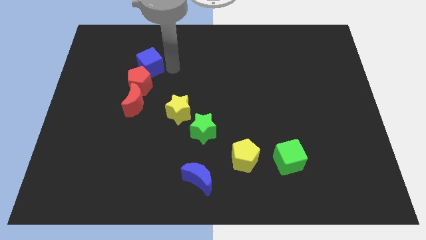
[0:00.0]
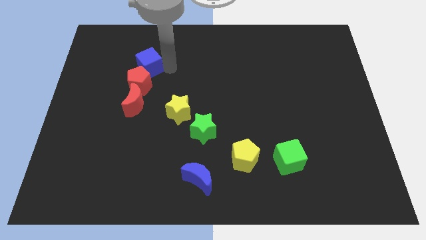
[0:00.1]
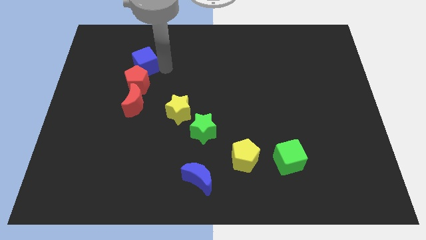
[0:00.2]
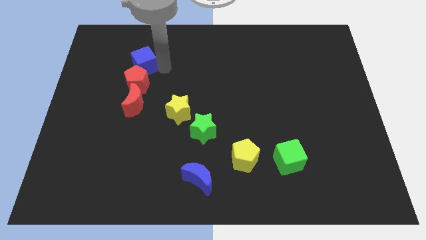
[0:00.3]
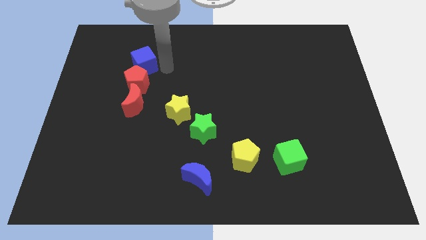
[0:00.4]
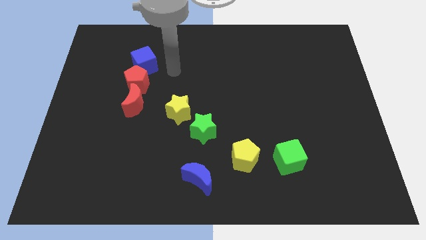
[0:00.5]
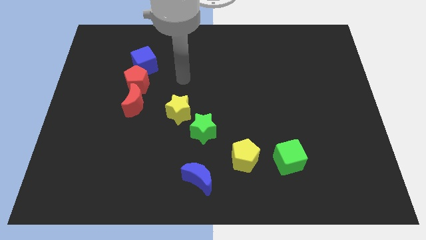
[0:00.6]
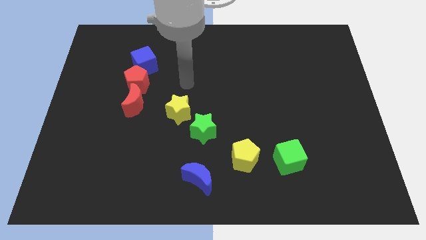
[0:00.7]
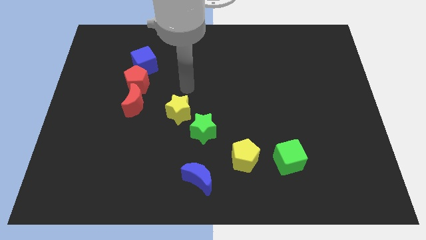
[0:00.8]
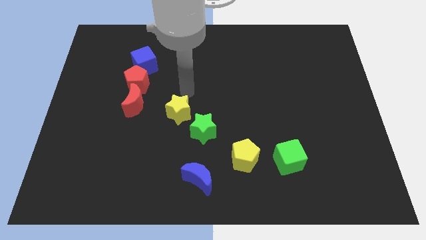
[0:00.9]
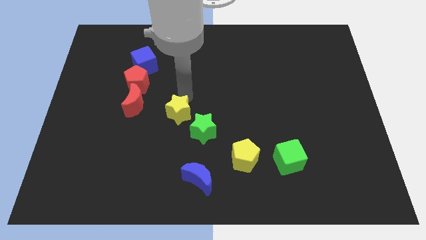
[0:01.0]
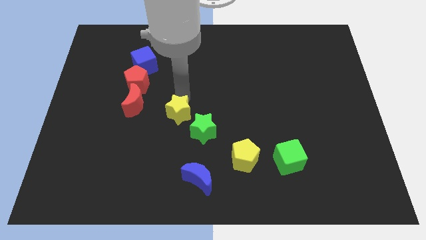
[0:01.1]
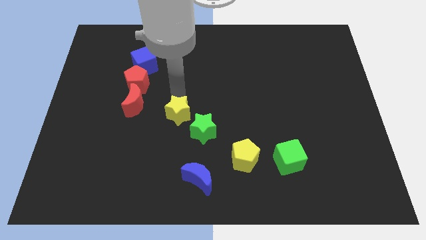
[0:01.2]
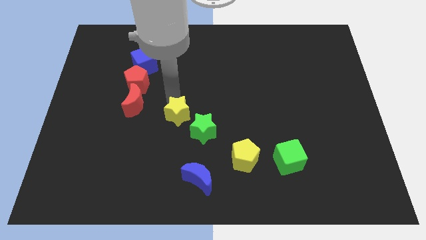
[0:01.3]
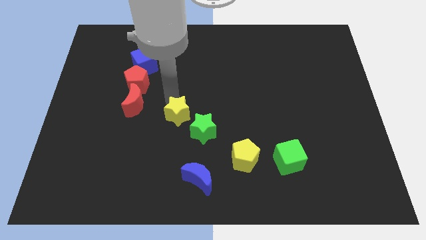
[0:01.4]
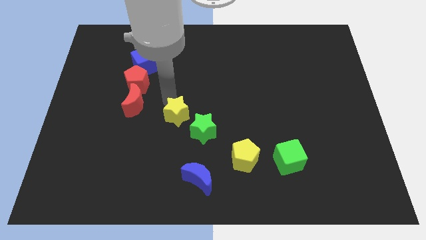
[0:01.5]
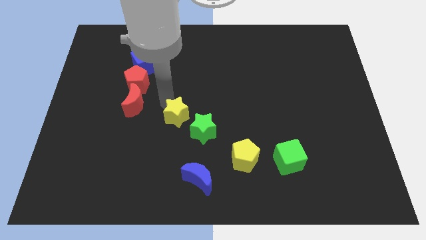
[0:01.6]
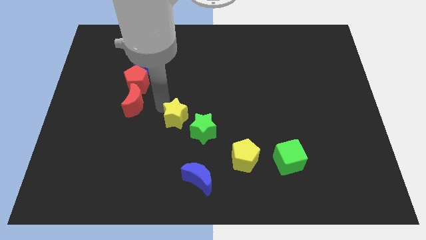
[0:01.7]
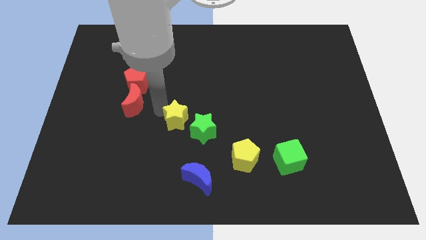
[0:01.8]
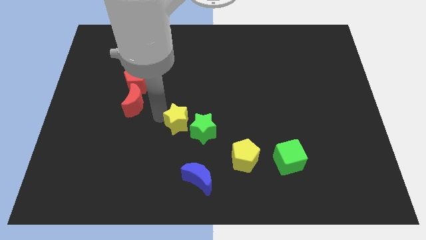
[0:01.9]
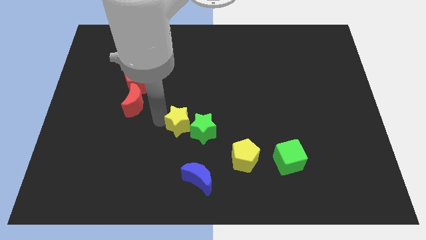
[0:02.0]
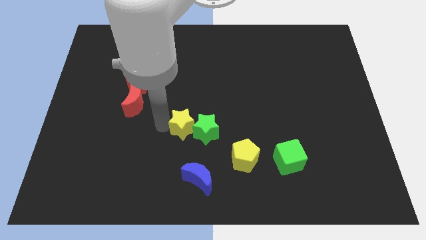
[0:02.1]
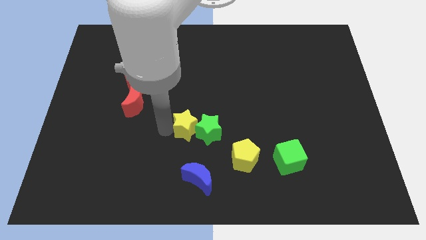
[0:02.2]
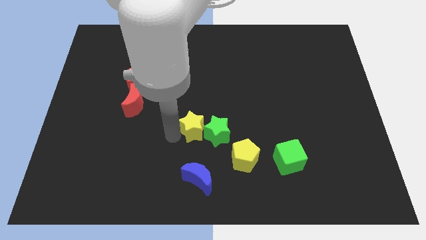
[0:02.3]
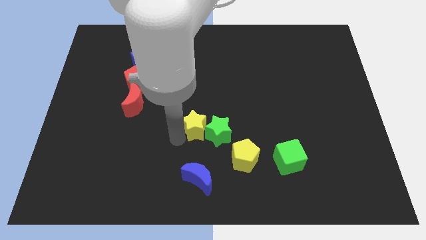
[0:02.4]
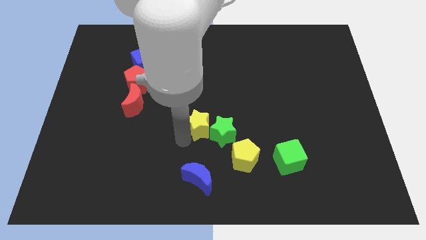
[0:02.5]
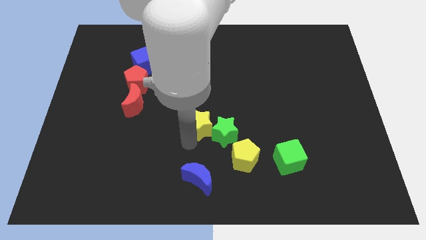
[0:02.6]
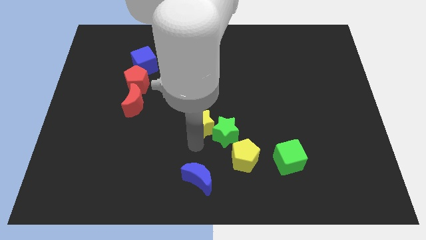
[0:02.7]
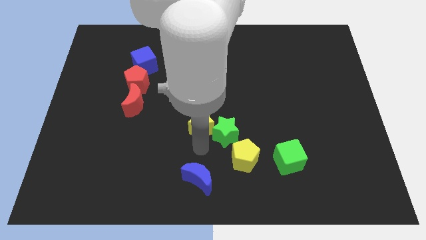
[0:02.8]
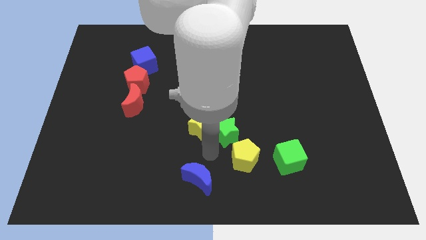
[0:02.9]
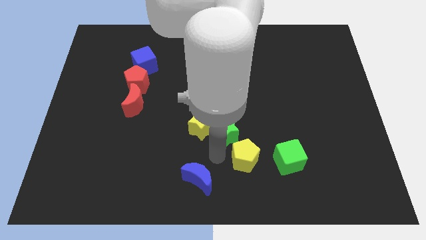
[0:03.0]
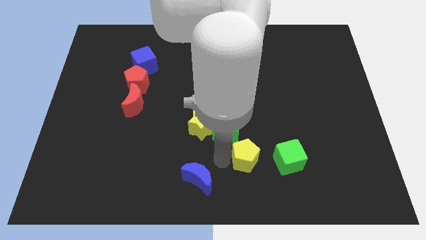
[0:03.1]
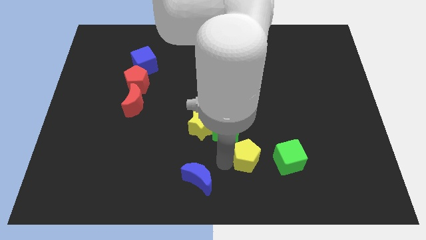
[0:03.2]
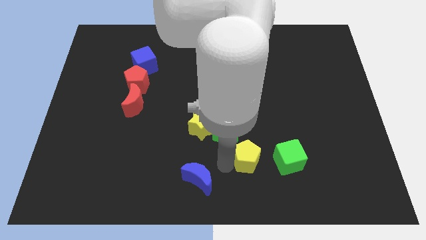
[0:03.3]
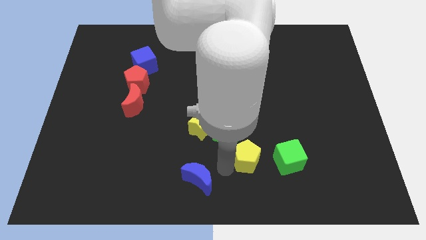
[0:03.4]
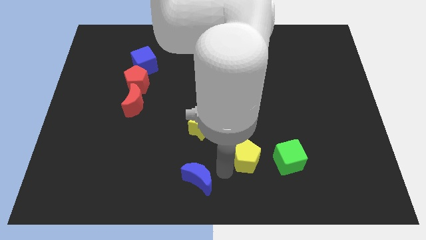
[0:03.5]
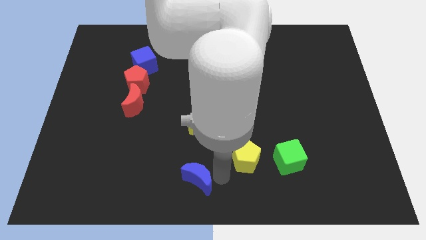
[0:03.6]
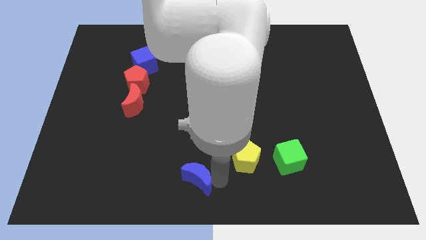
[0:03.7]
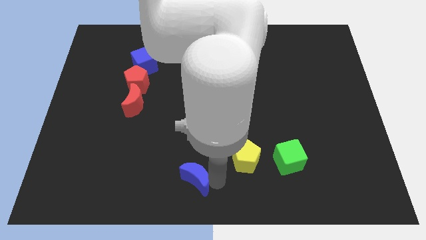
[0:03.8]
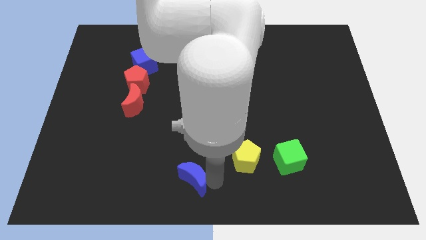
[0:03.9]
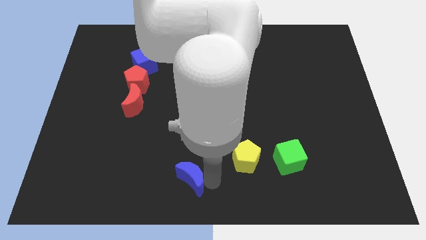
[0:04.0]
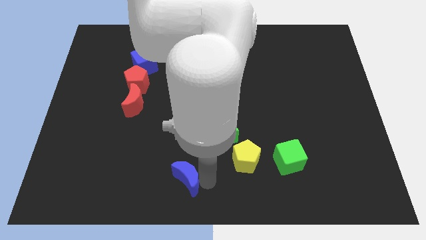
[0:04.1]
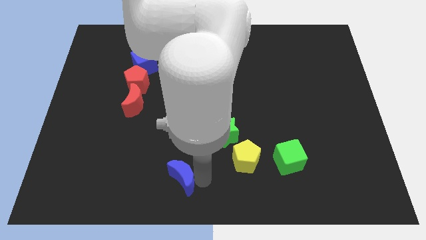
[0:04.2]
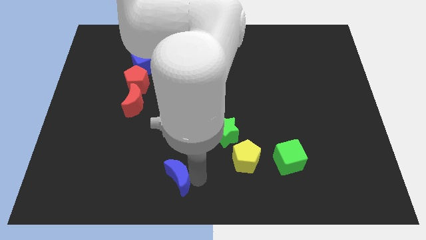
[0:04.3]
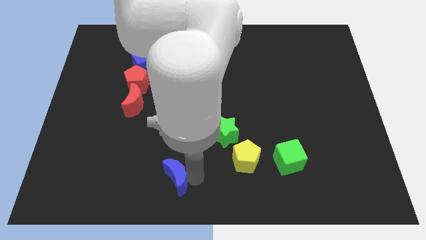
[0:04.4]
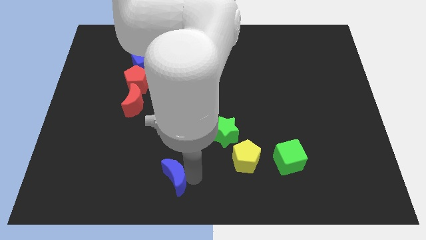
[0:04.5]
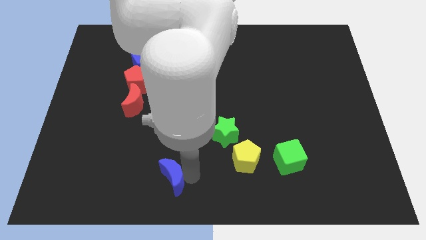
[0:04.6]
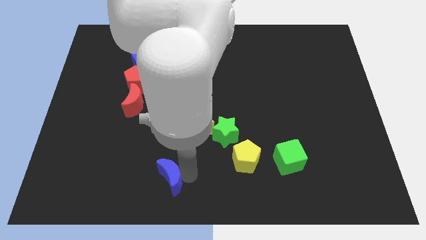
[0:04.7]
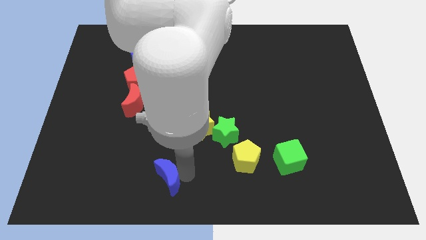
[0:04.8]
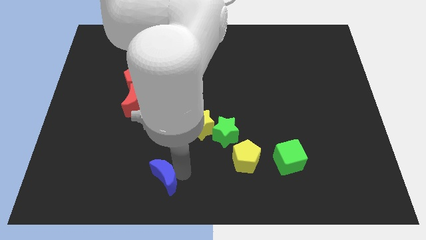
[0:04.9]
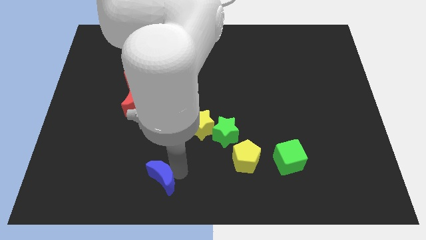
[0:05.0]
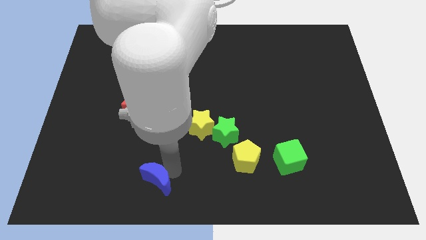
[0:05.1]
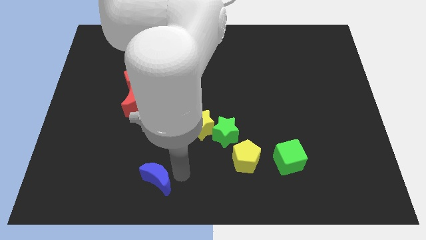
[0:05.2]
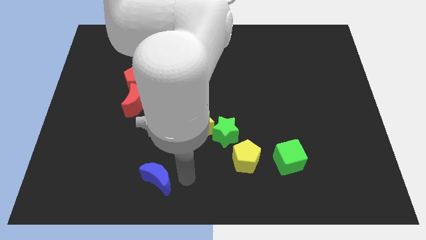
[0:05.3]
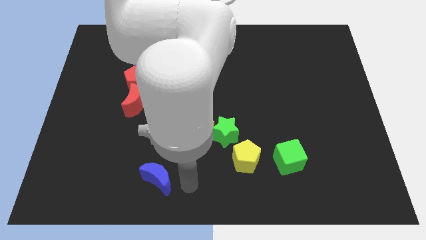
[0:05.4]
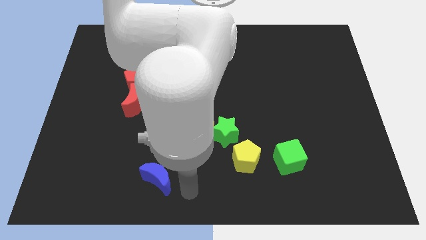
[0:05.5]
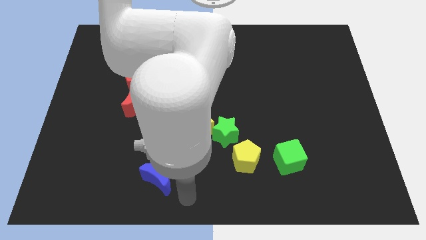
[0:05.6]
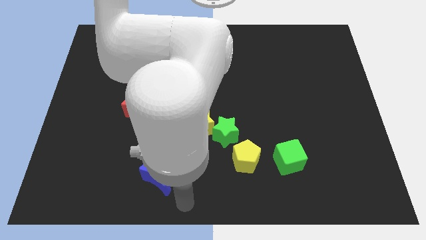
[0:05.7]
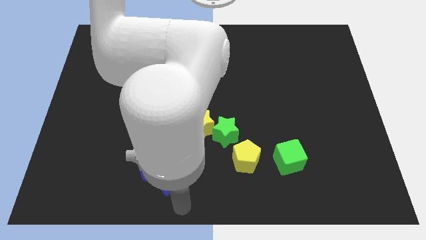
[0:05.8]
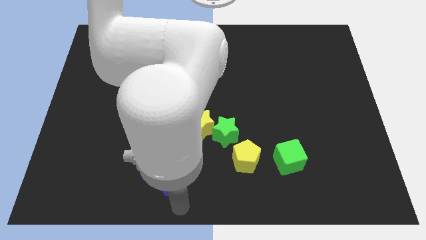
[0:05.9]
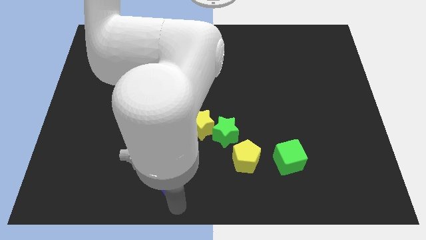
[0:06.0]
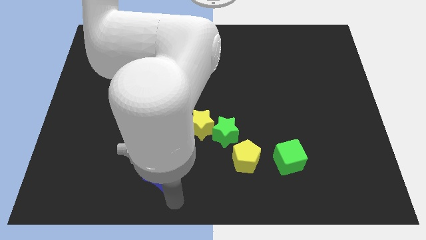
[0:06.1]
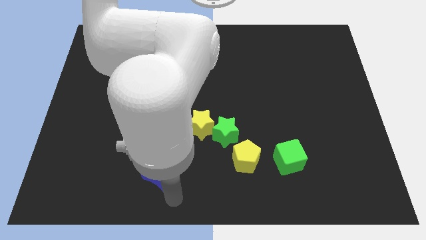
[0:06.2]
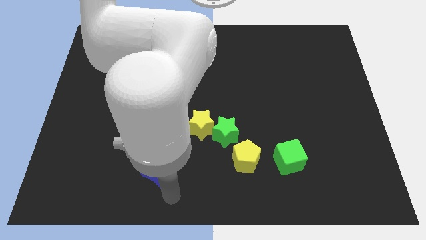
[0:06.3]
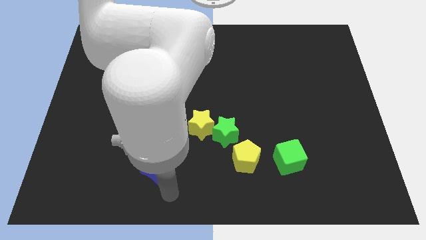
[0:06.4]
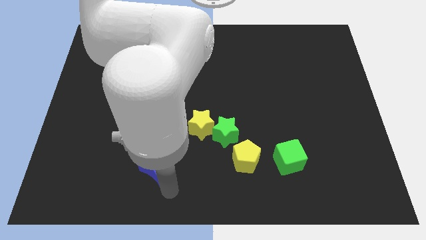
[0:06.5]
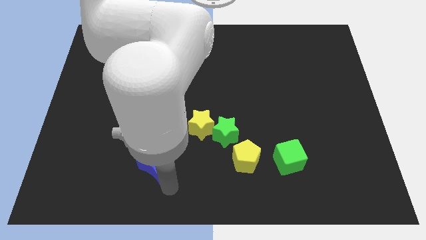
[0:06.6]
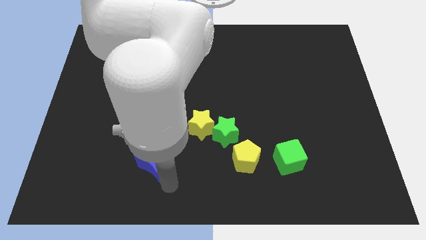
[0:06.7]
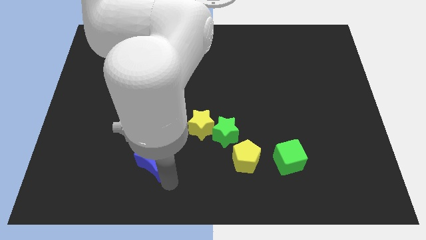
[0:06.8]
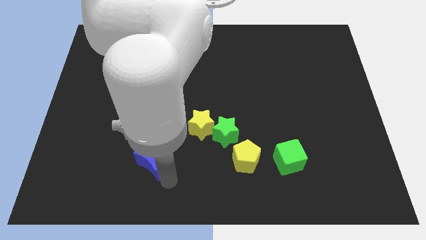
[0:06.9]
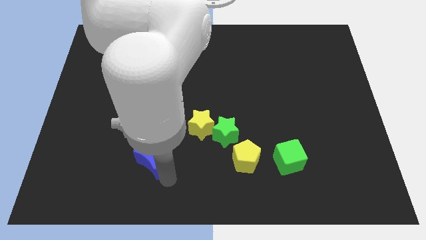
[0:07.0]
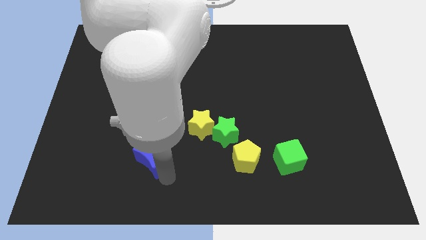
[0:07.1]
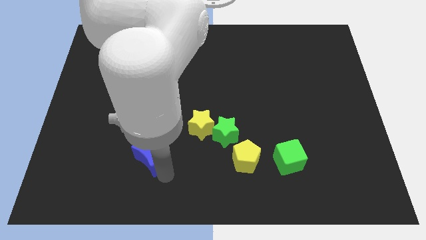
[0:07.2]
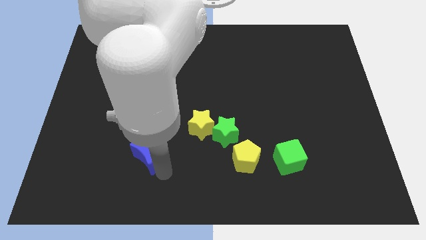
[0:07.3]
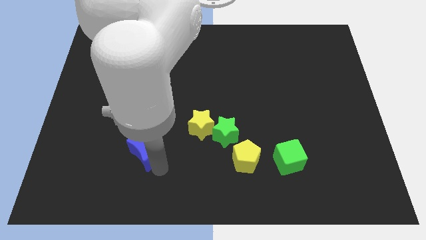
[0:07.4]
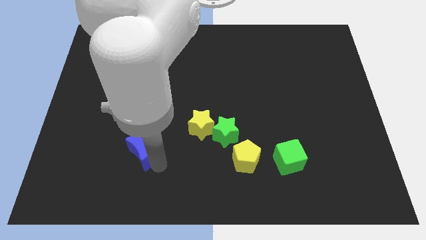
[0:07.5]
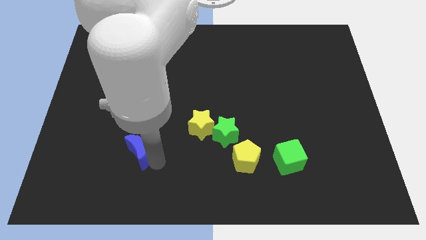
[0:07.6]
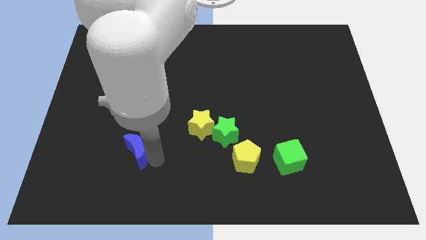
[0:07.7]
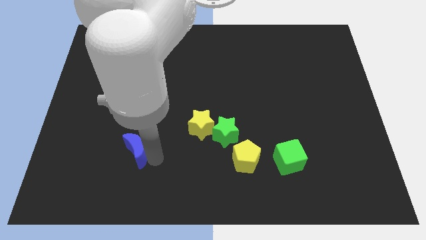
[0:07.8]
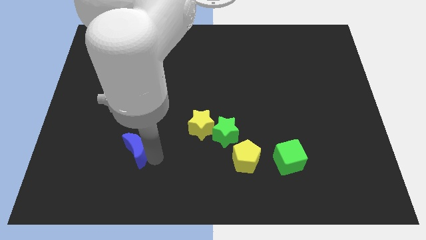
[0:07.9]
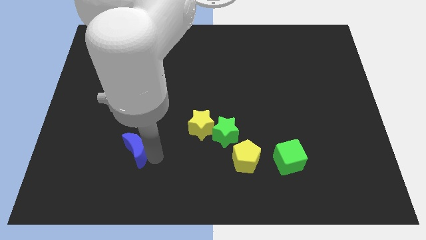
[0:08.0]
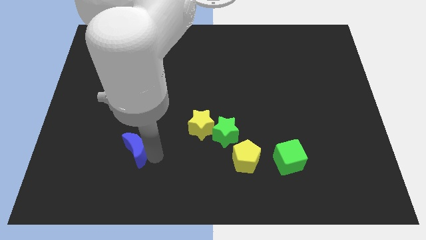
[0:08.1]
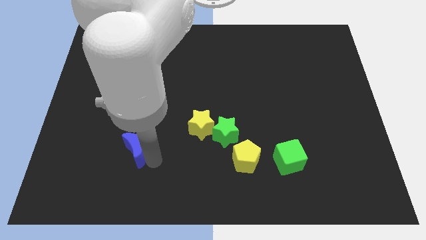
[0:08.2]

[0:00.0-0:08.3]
move the blue crescent slightly left

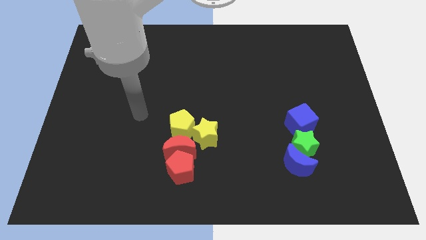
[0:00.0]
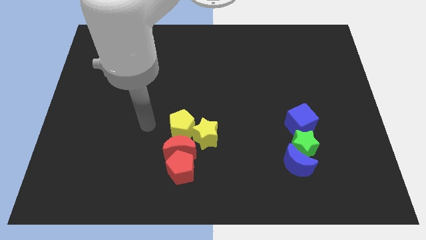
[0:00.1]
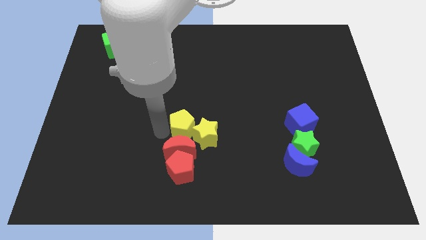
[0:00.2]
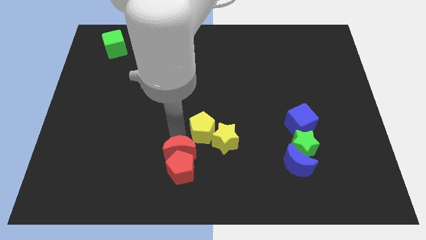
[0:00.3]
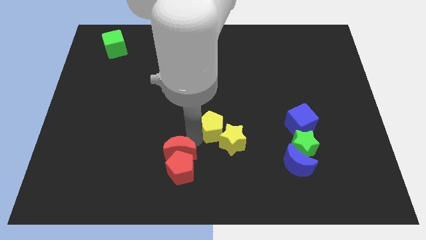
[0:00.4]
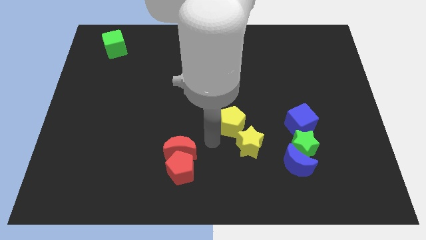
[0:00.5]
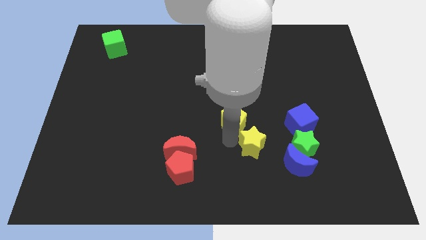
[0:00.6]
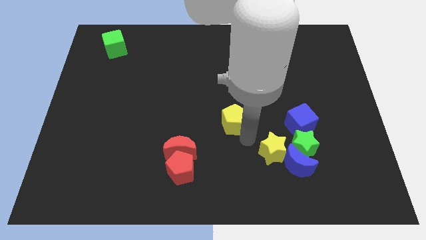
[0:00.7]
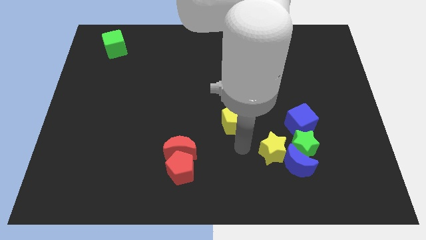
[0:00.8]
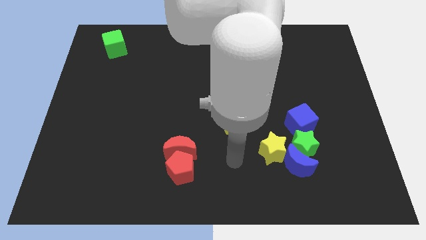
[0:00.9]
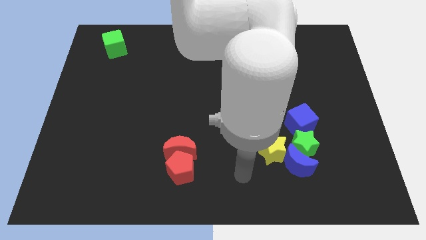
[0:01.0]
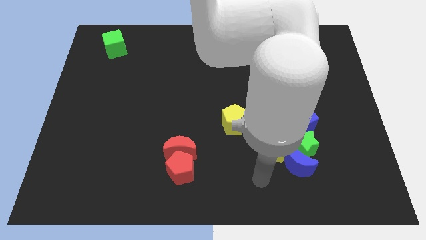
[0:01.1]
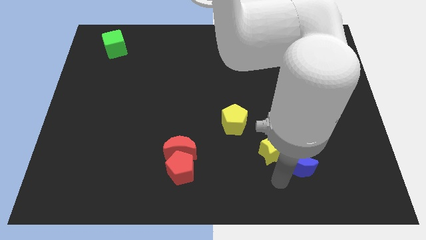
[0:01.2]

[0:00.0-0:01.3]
separate the blue moon from the yellow star
